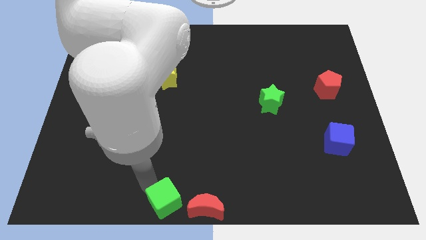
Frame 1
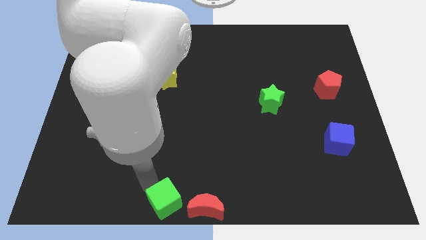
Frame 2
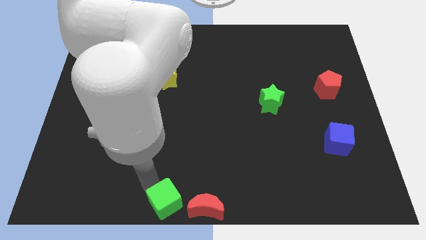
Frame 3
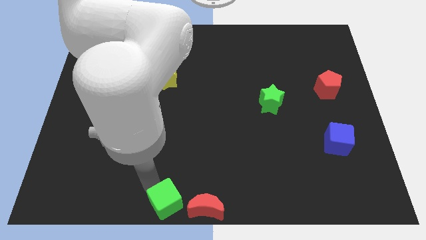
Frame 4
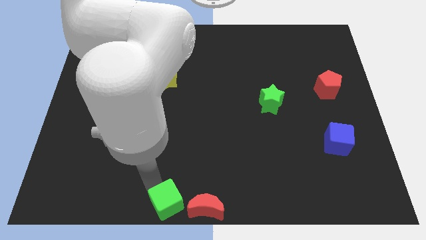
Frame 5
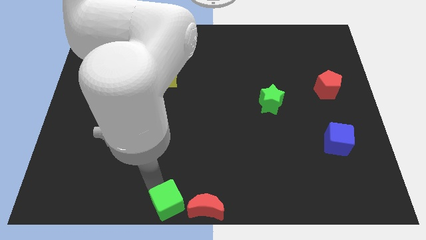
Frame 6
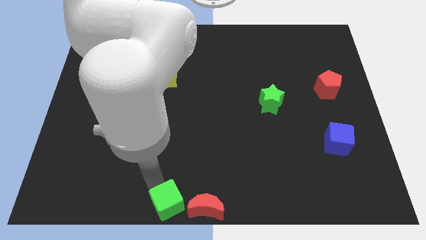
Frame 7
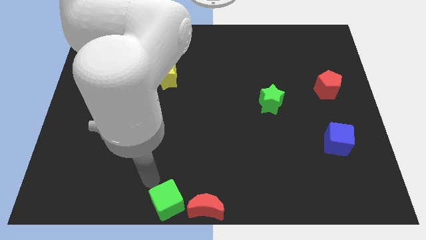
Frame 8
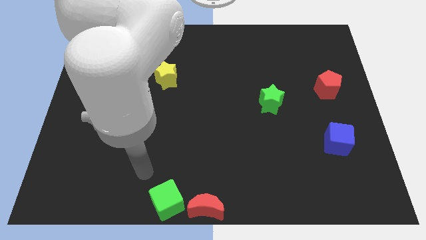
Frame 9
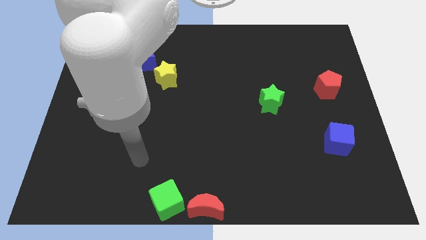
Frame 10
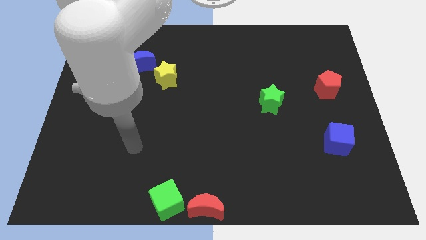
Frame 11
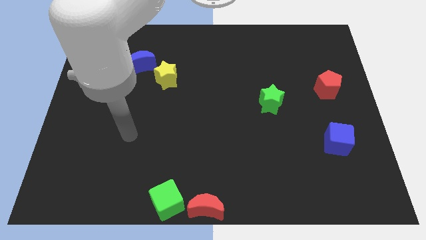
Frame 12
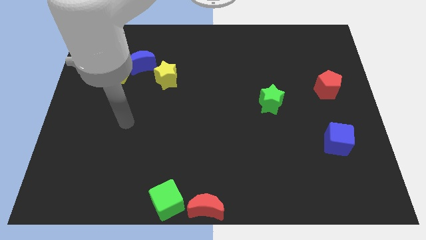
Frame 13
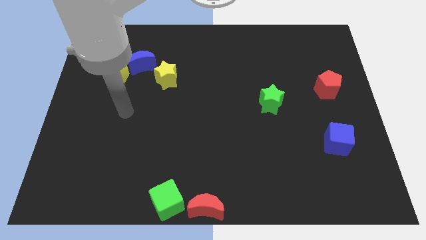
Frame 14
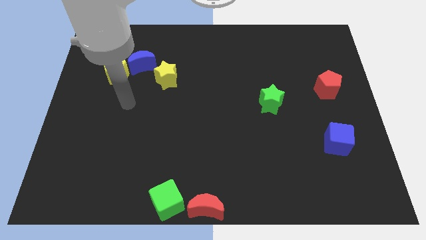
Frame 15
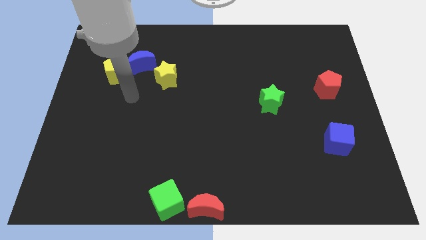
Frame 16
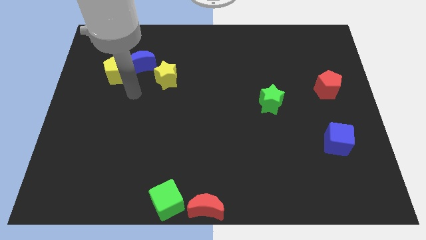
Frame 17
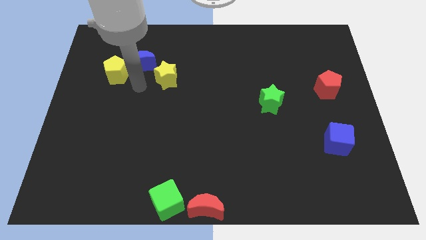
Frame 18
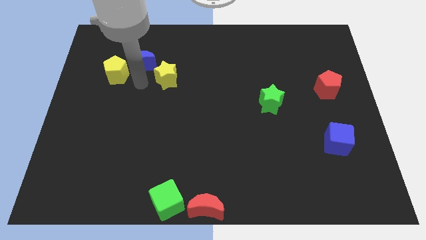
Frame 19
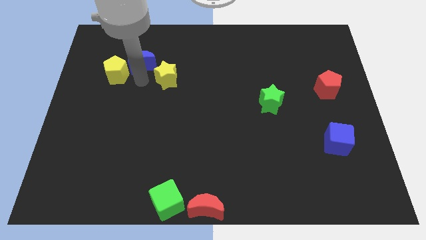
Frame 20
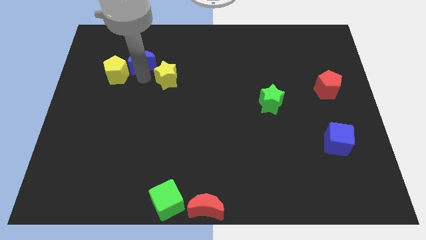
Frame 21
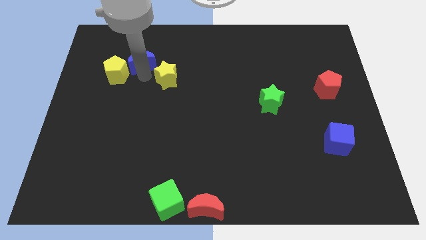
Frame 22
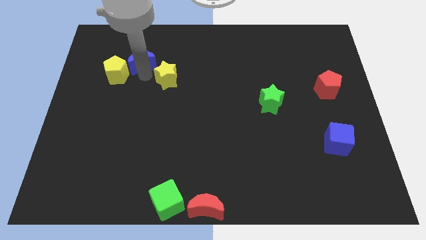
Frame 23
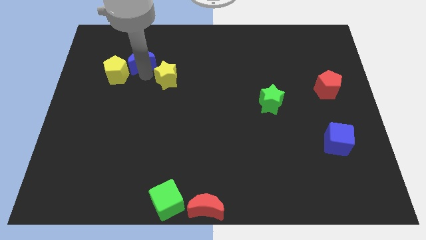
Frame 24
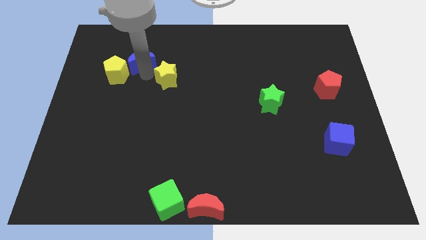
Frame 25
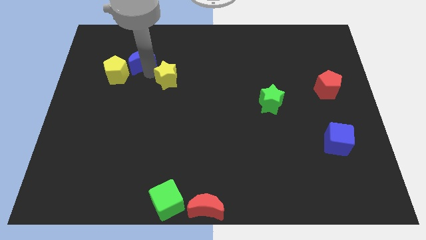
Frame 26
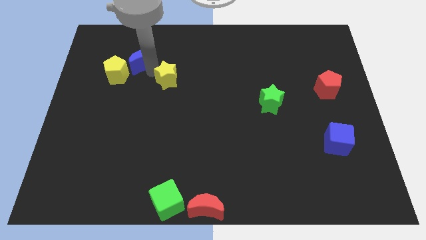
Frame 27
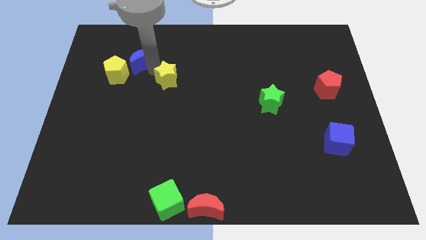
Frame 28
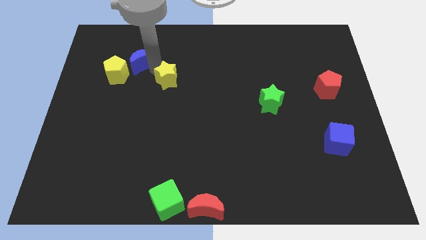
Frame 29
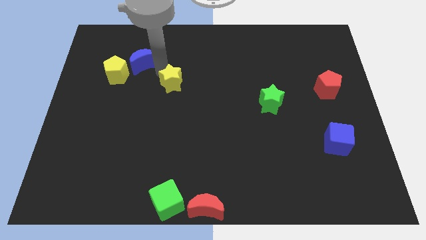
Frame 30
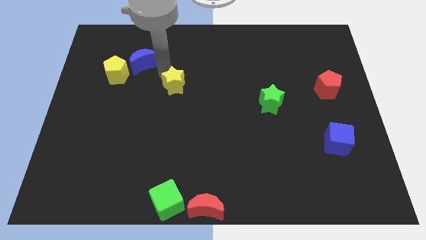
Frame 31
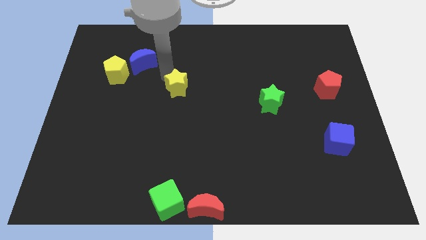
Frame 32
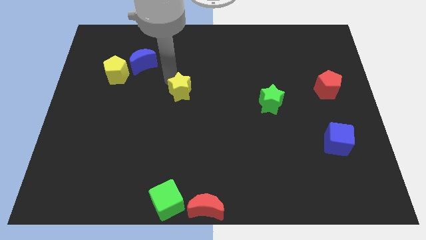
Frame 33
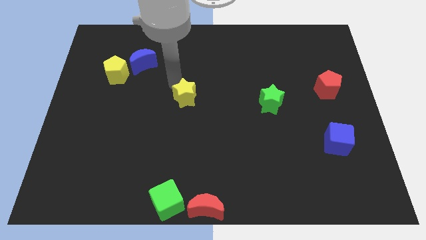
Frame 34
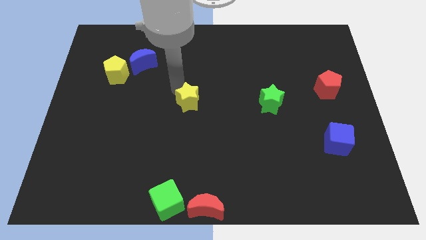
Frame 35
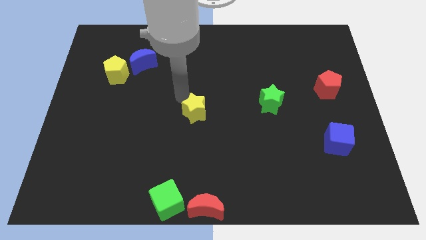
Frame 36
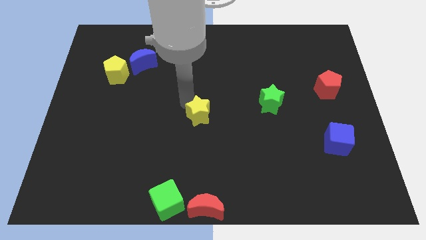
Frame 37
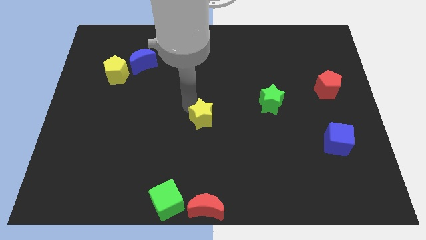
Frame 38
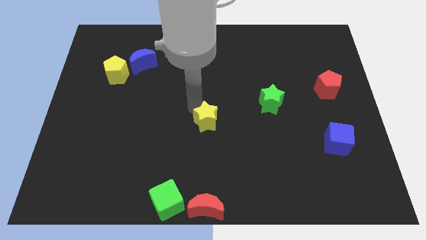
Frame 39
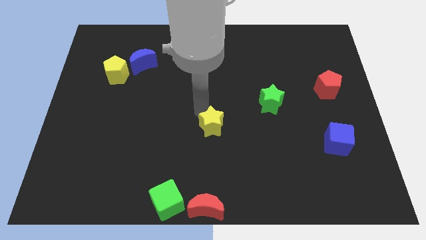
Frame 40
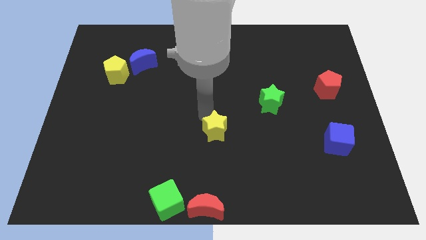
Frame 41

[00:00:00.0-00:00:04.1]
push the yellow star towards the center of the board

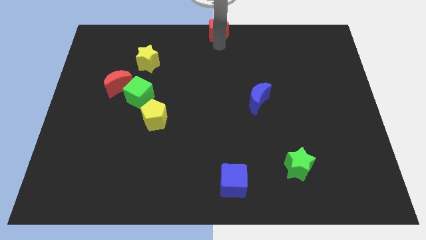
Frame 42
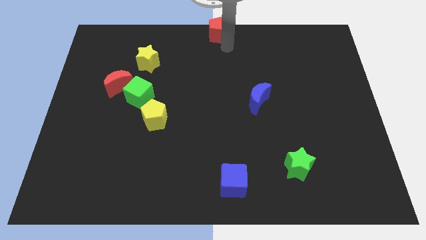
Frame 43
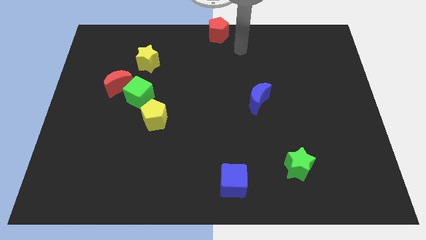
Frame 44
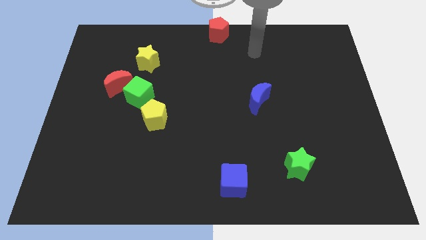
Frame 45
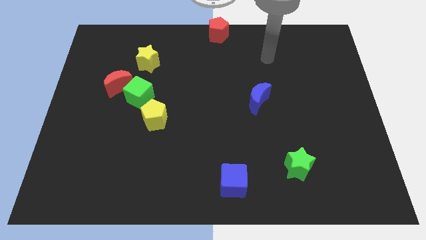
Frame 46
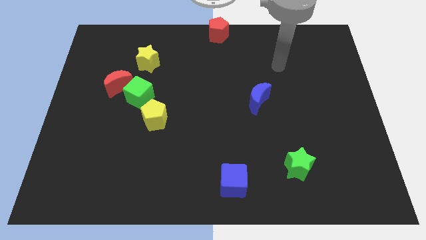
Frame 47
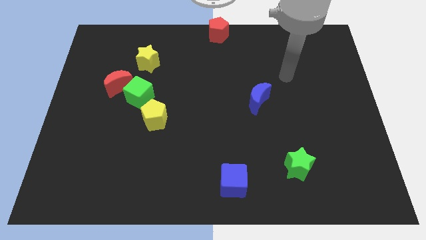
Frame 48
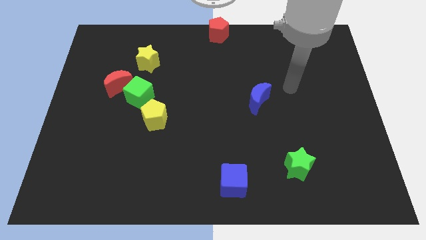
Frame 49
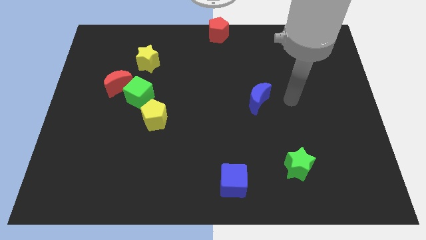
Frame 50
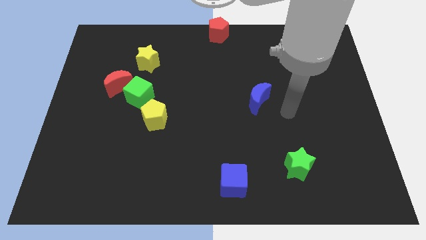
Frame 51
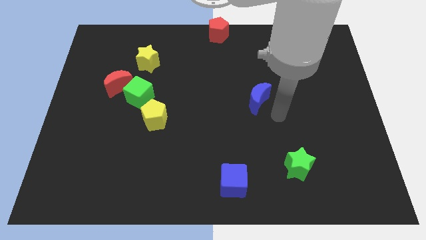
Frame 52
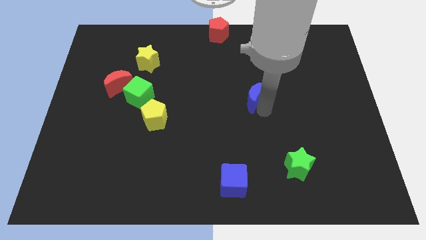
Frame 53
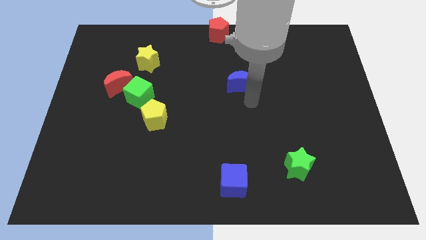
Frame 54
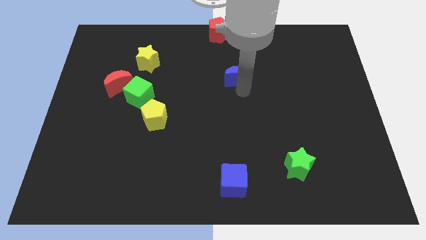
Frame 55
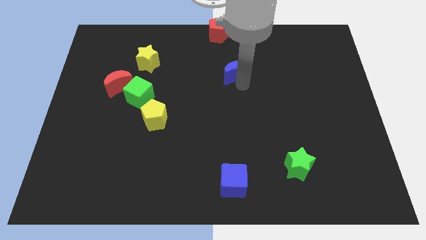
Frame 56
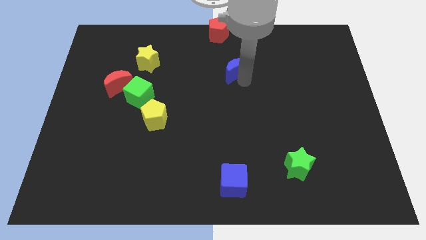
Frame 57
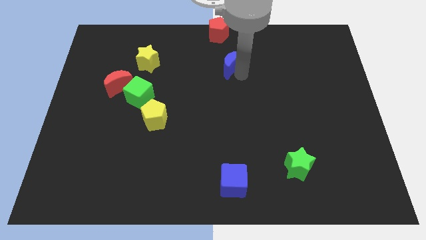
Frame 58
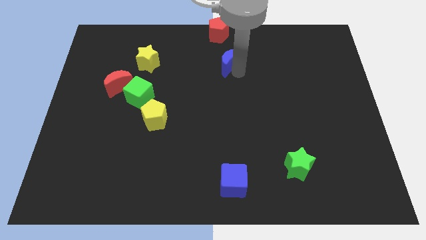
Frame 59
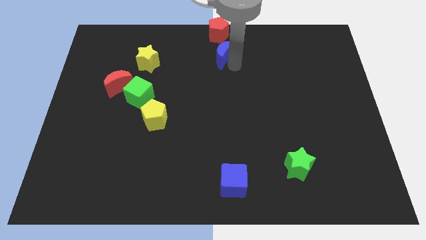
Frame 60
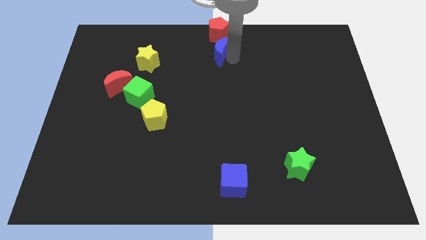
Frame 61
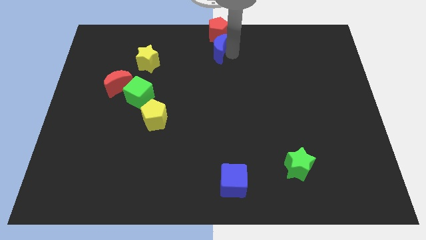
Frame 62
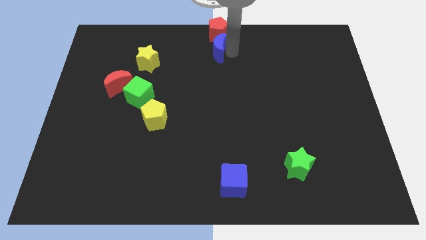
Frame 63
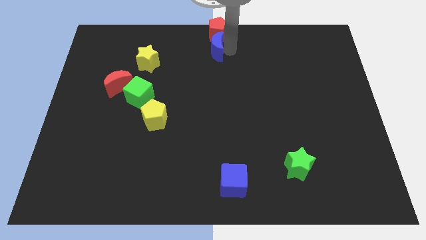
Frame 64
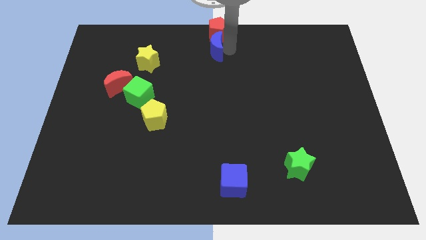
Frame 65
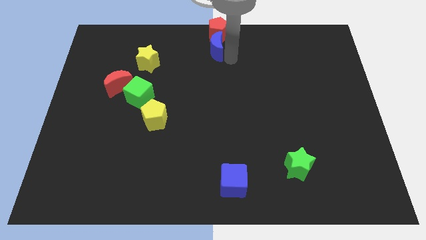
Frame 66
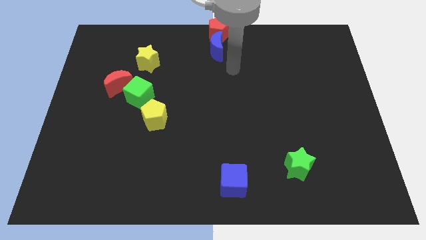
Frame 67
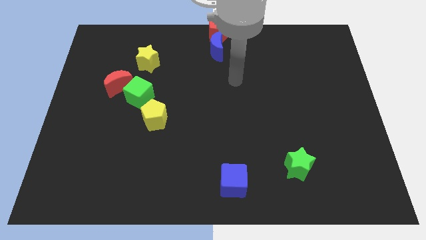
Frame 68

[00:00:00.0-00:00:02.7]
move the blue crescent to the bottom of the red pentagon

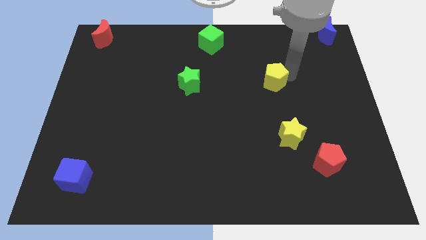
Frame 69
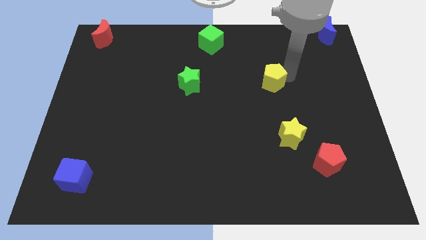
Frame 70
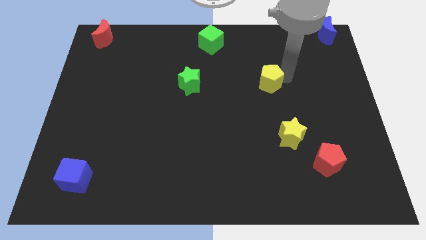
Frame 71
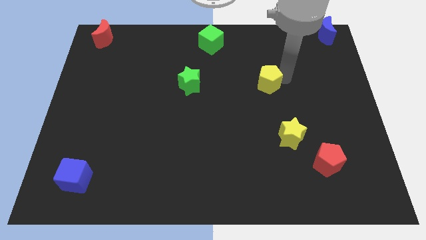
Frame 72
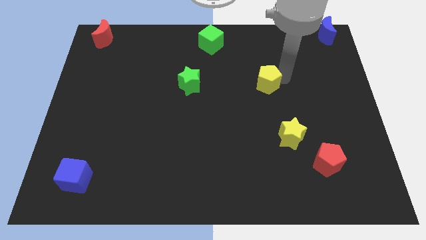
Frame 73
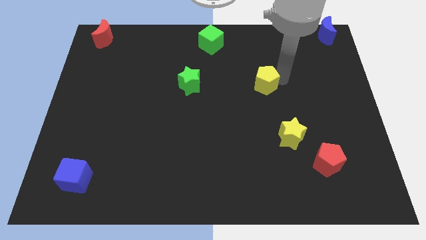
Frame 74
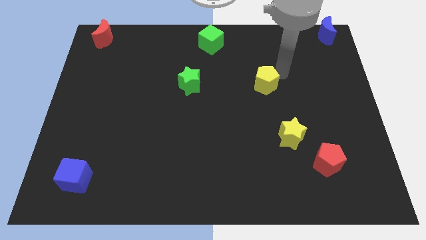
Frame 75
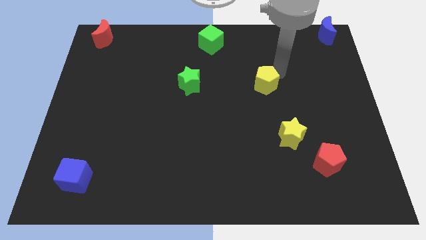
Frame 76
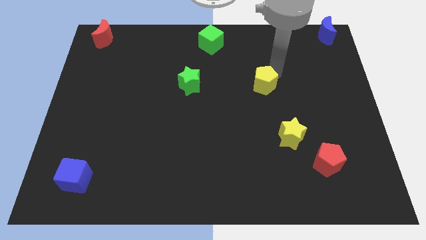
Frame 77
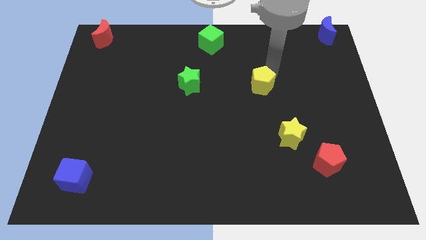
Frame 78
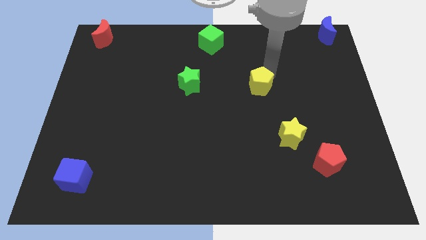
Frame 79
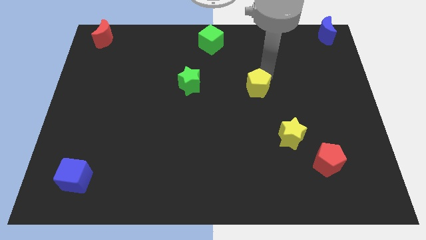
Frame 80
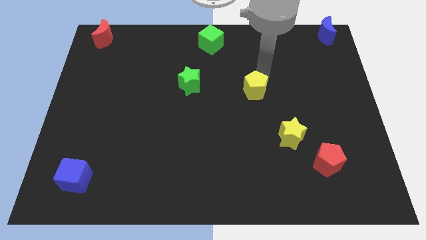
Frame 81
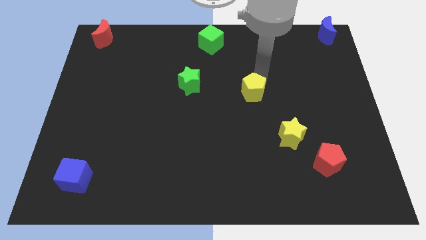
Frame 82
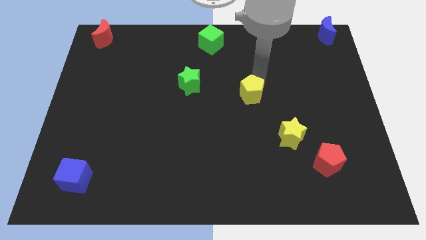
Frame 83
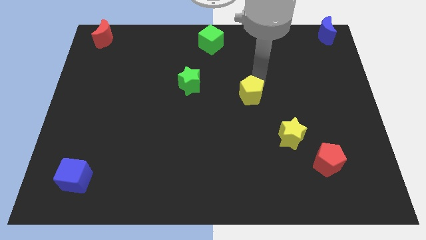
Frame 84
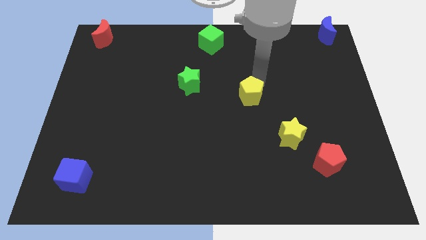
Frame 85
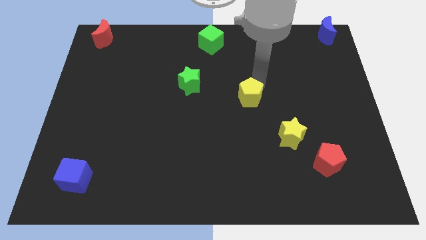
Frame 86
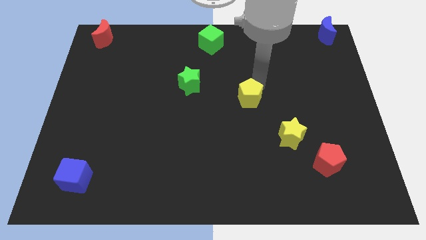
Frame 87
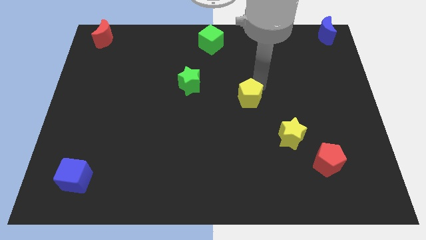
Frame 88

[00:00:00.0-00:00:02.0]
push the yellow pentagon to the top left of the yellow star
